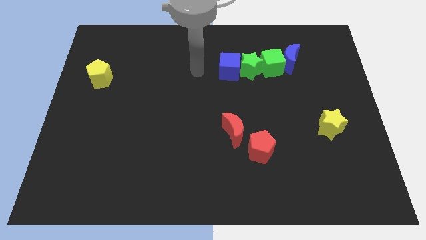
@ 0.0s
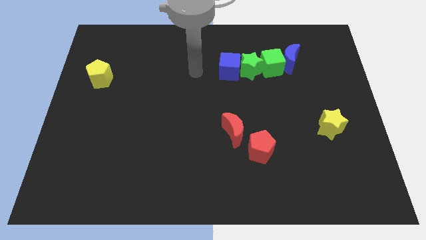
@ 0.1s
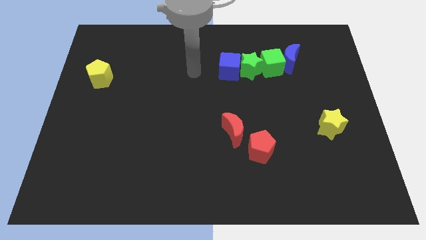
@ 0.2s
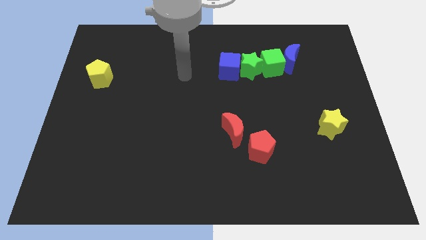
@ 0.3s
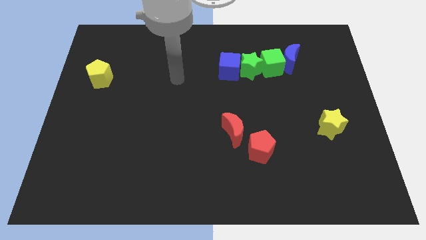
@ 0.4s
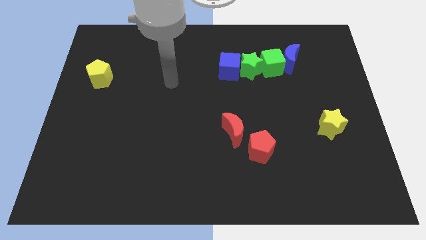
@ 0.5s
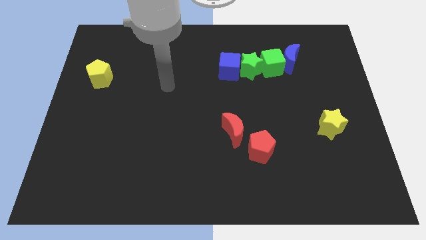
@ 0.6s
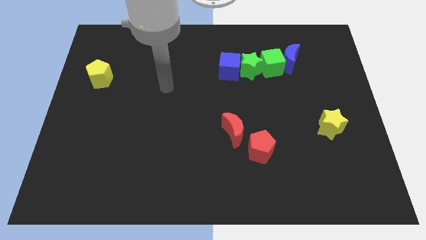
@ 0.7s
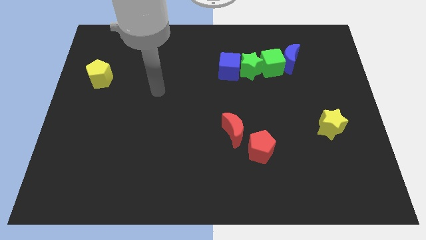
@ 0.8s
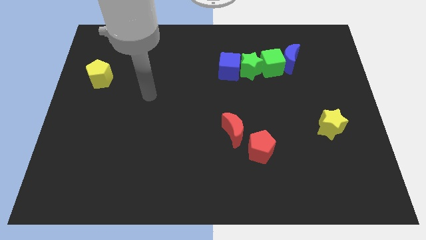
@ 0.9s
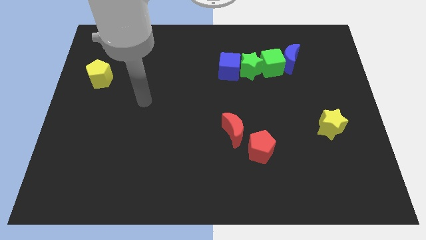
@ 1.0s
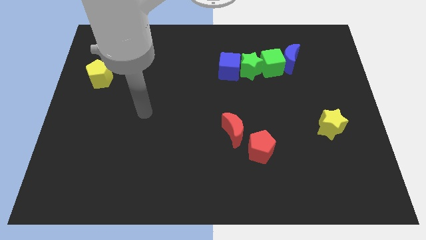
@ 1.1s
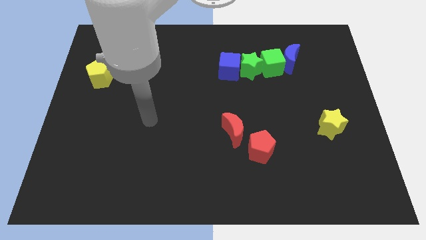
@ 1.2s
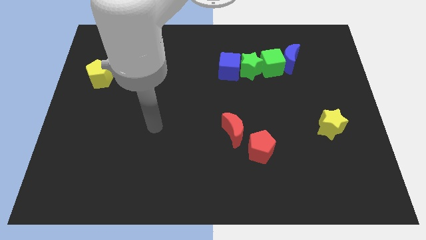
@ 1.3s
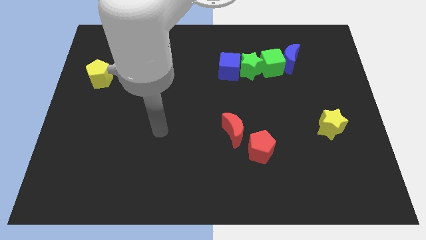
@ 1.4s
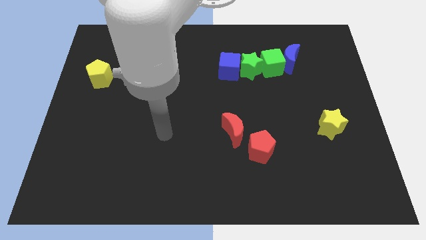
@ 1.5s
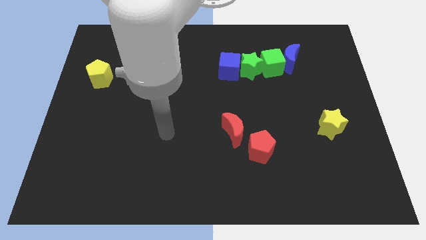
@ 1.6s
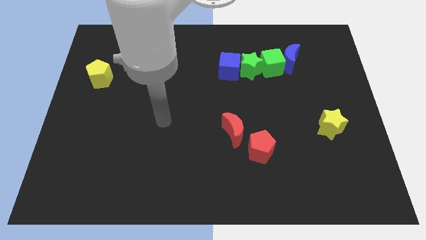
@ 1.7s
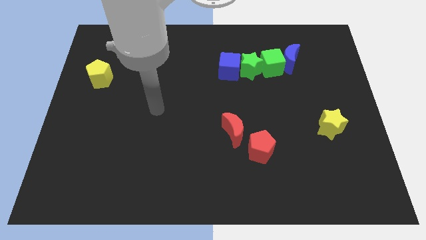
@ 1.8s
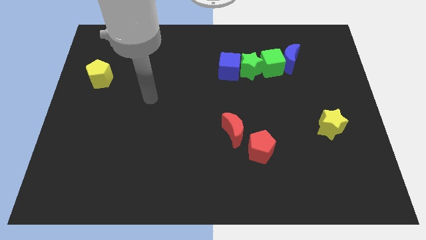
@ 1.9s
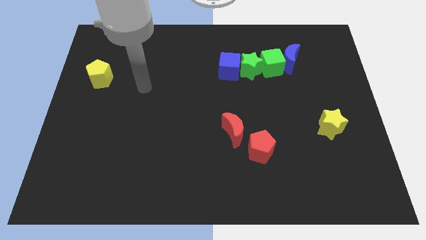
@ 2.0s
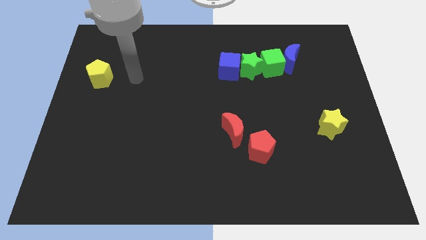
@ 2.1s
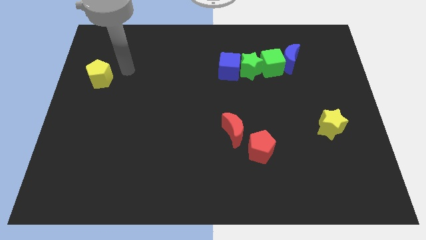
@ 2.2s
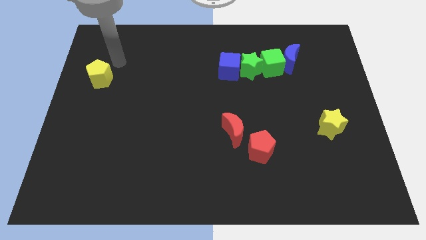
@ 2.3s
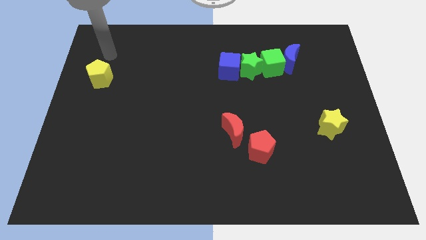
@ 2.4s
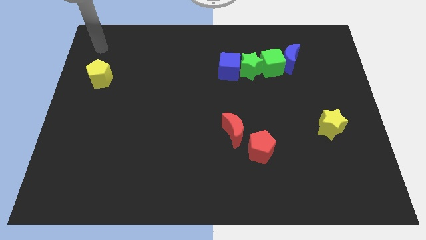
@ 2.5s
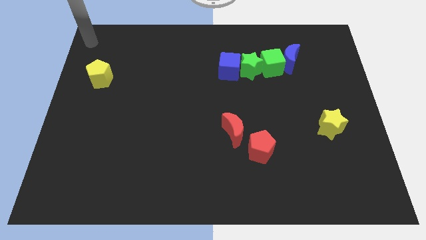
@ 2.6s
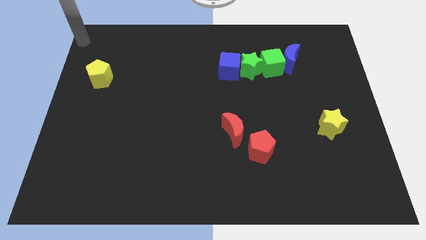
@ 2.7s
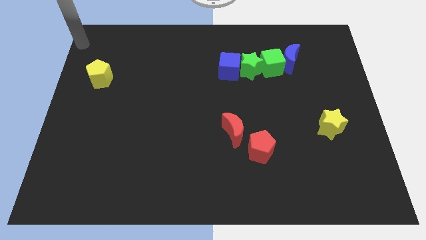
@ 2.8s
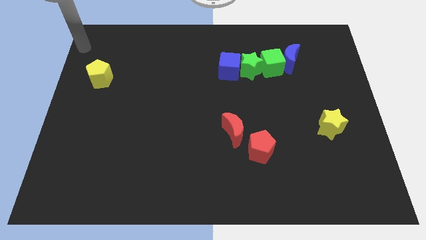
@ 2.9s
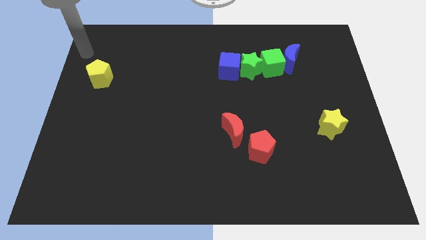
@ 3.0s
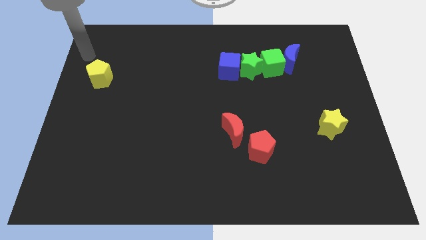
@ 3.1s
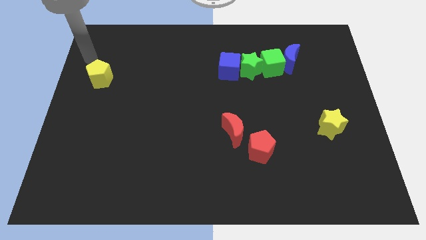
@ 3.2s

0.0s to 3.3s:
move your arm to the top of yellow pentagon

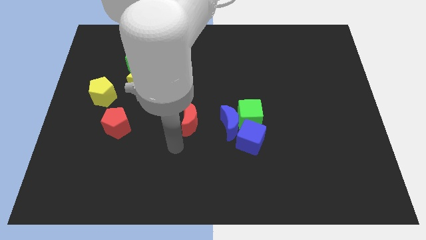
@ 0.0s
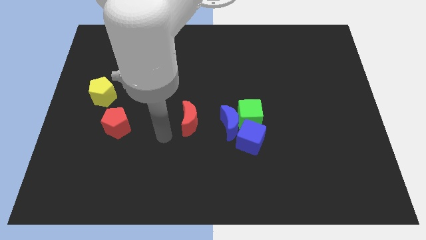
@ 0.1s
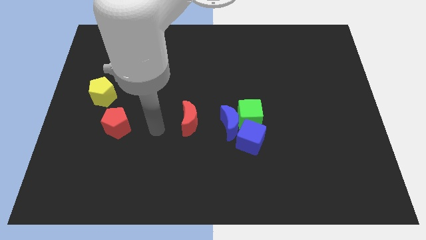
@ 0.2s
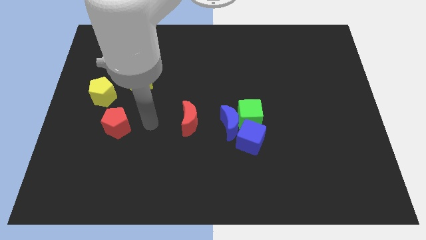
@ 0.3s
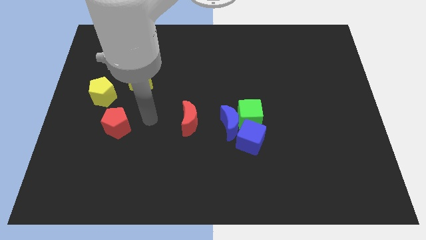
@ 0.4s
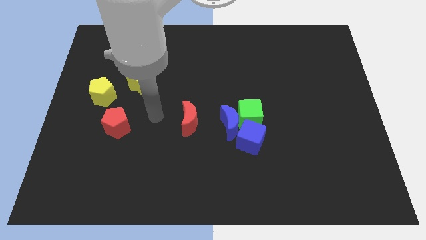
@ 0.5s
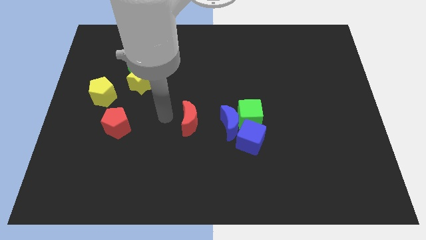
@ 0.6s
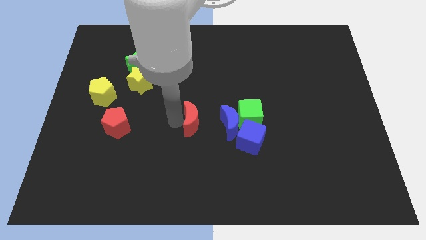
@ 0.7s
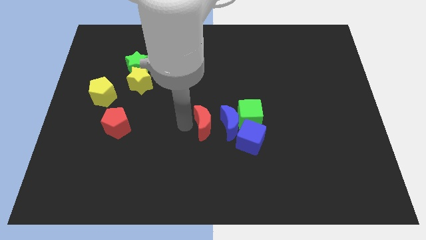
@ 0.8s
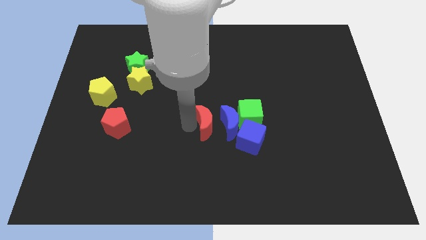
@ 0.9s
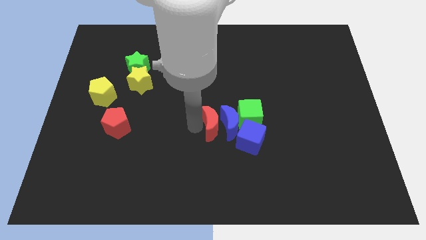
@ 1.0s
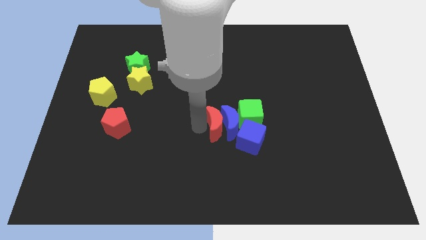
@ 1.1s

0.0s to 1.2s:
move the red moon to the left of the blue moon

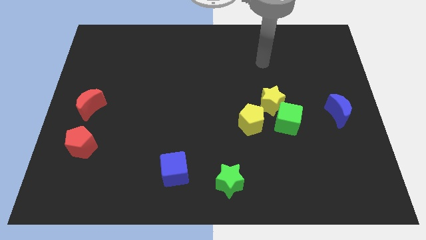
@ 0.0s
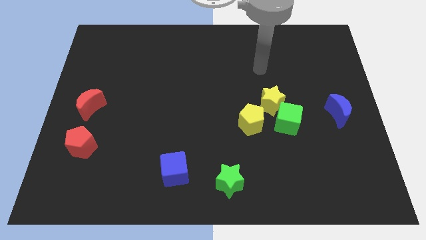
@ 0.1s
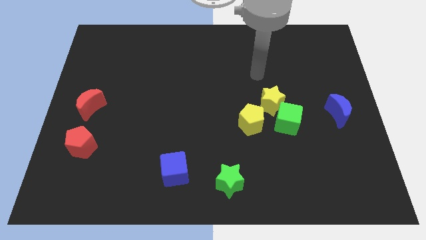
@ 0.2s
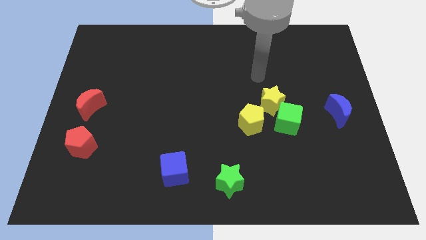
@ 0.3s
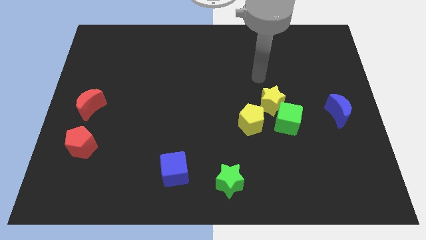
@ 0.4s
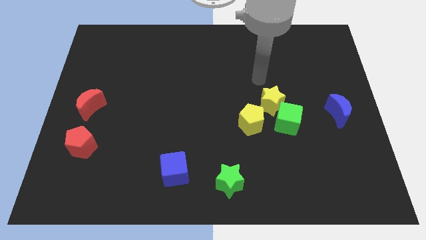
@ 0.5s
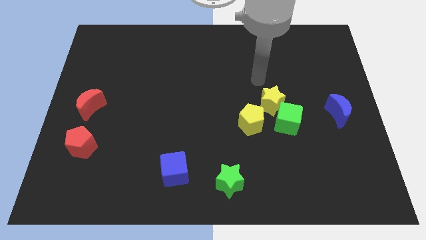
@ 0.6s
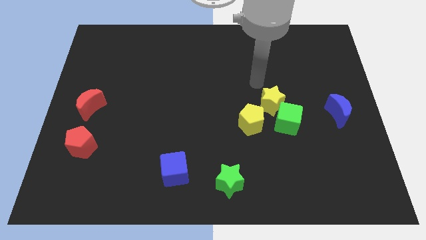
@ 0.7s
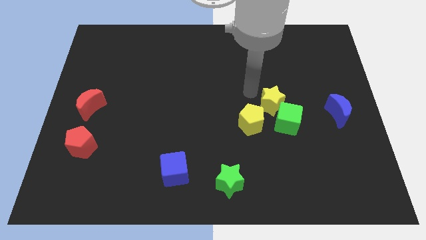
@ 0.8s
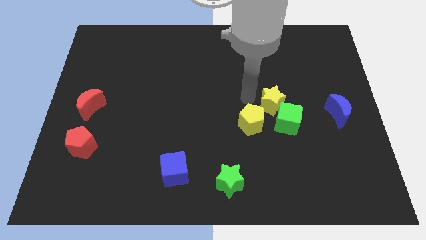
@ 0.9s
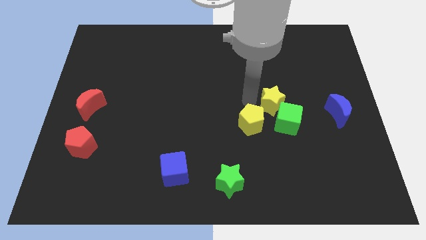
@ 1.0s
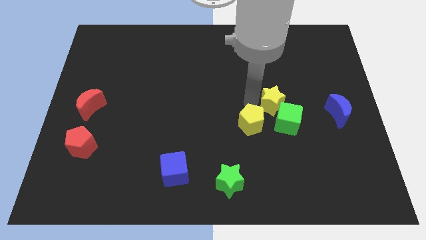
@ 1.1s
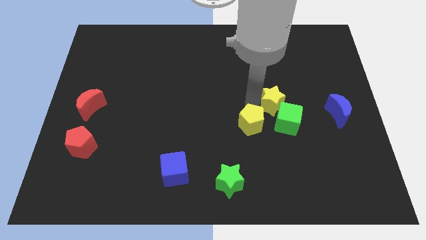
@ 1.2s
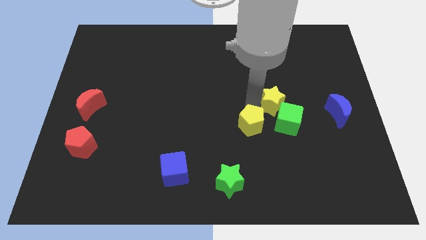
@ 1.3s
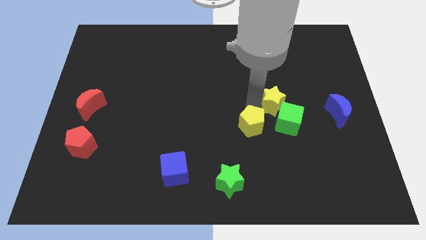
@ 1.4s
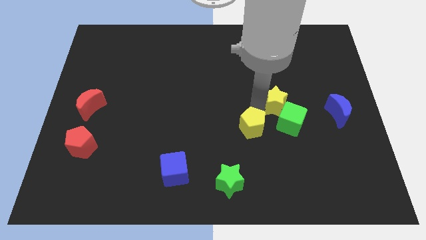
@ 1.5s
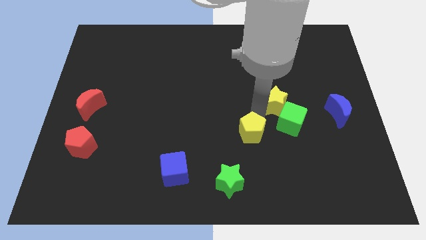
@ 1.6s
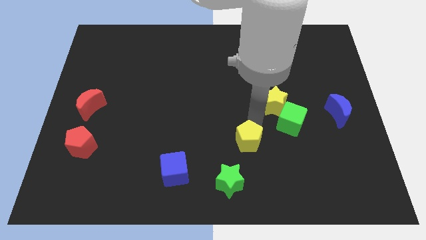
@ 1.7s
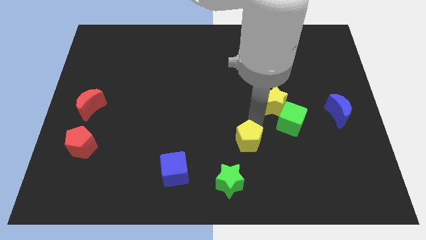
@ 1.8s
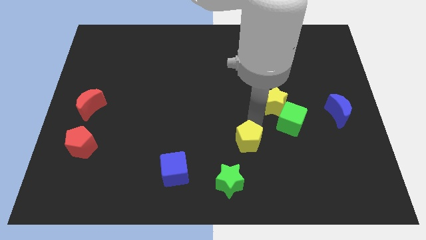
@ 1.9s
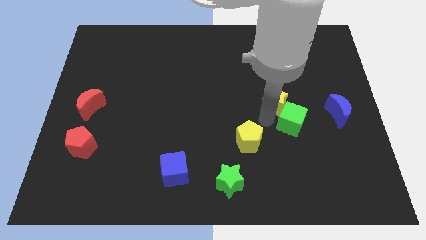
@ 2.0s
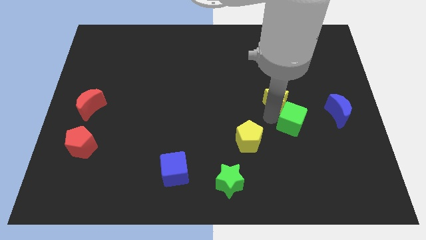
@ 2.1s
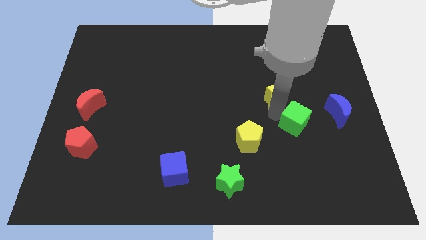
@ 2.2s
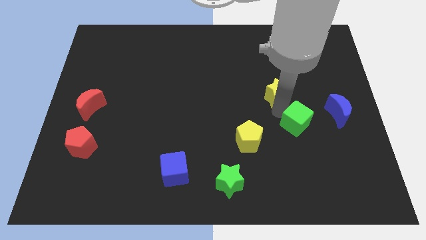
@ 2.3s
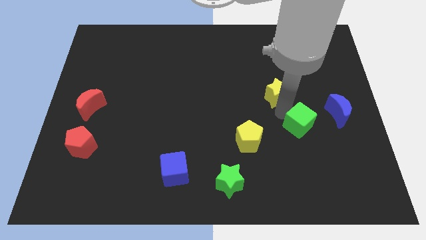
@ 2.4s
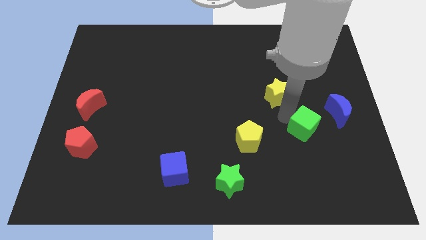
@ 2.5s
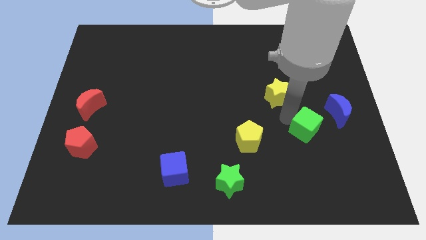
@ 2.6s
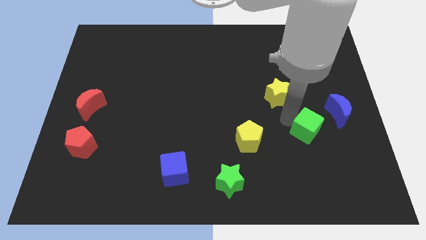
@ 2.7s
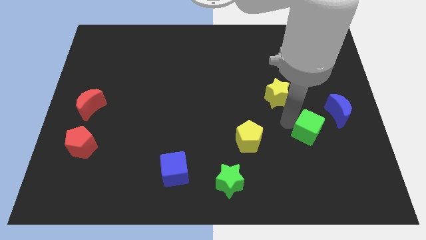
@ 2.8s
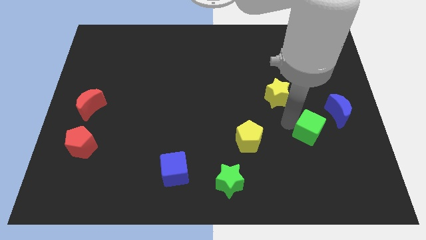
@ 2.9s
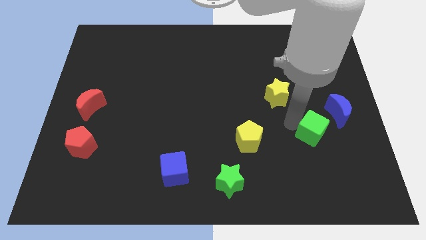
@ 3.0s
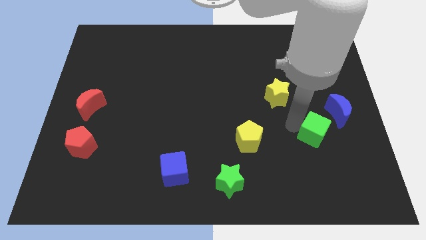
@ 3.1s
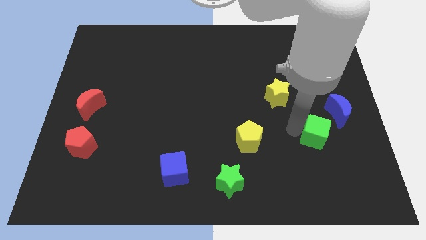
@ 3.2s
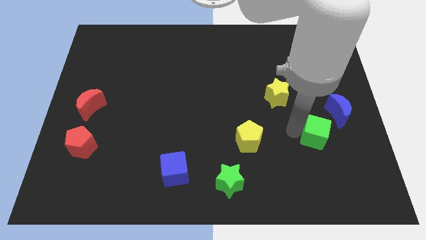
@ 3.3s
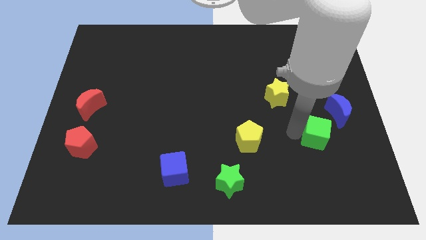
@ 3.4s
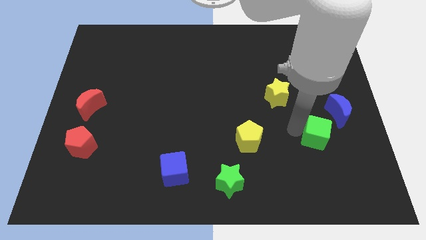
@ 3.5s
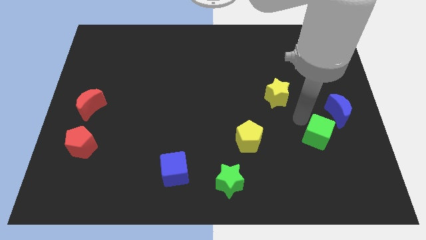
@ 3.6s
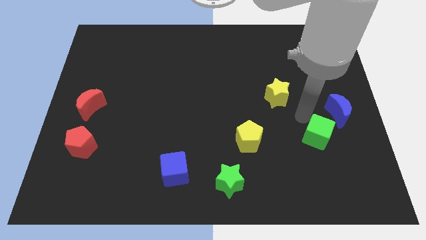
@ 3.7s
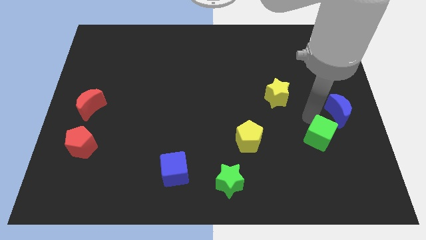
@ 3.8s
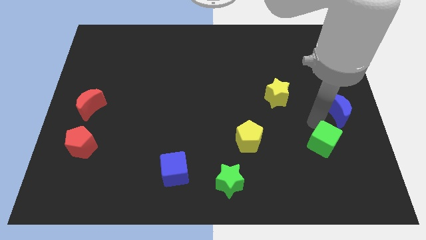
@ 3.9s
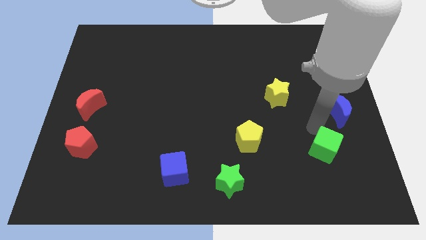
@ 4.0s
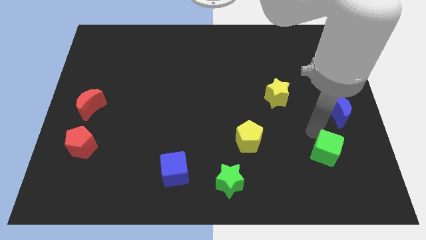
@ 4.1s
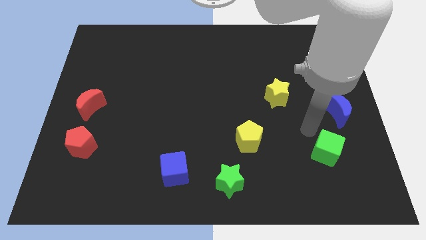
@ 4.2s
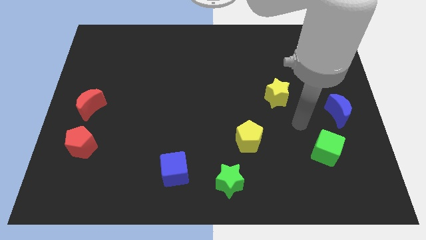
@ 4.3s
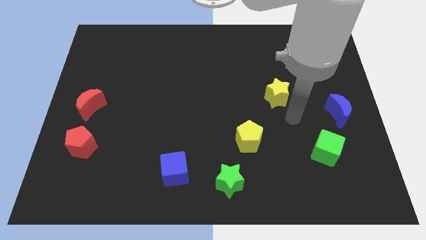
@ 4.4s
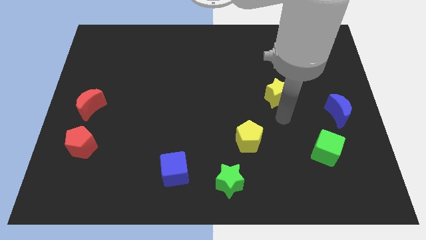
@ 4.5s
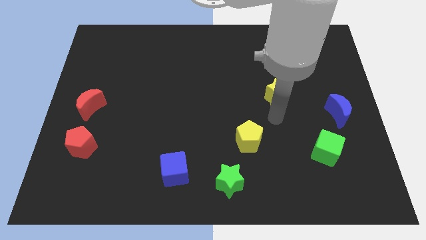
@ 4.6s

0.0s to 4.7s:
place the green cube below the blue moon
